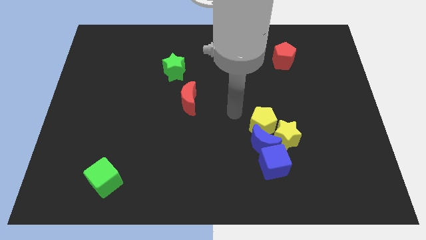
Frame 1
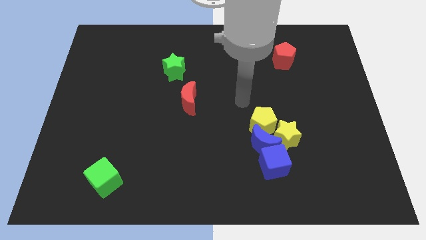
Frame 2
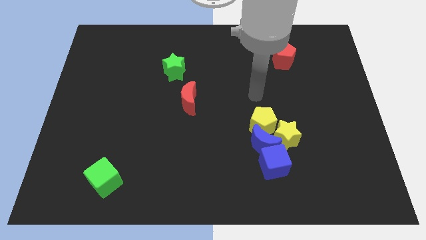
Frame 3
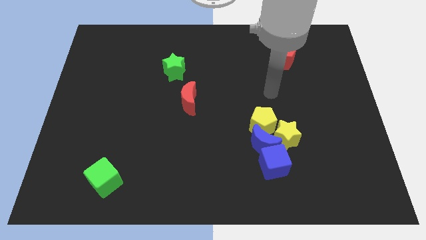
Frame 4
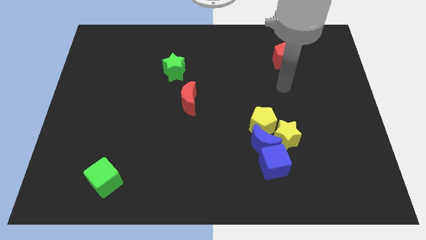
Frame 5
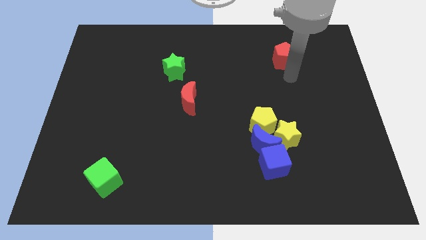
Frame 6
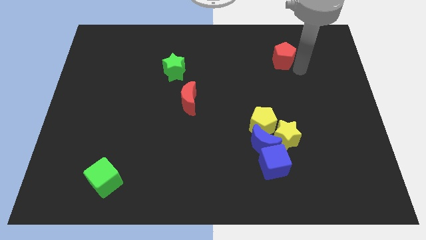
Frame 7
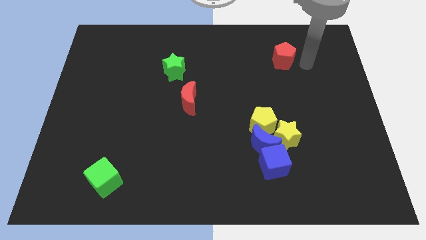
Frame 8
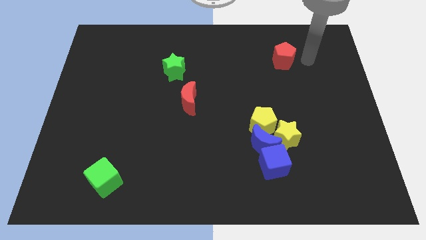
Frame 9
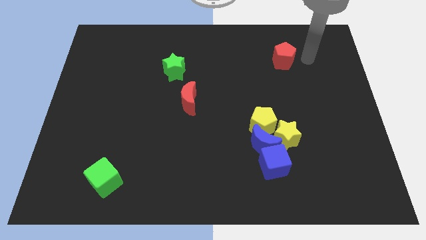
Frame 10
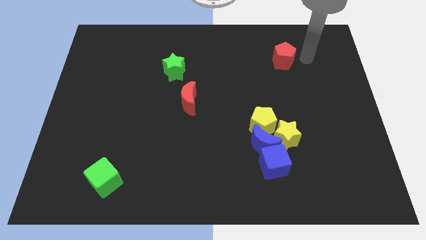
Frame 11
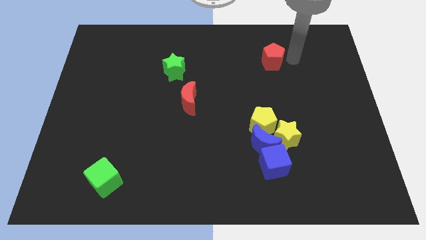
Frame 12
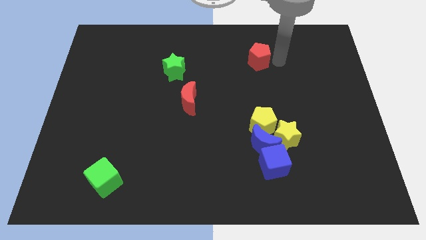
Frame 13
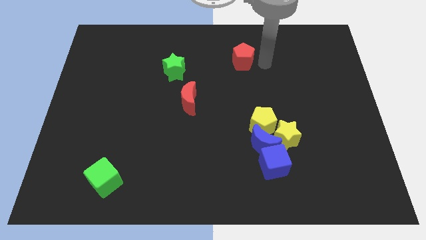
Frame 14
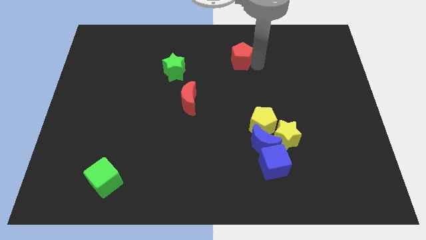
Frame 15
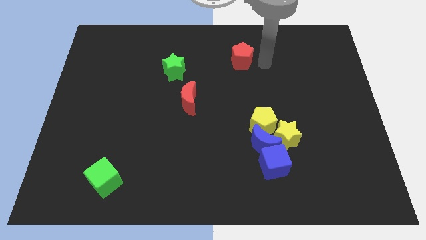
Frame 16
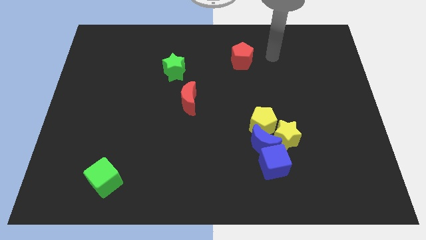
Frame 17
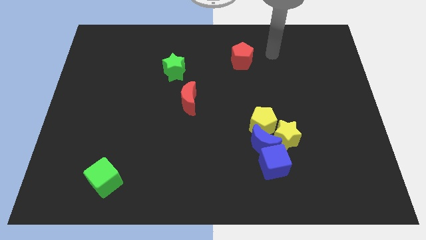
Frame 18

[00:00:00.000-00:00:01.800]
move the red pentagon slightly to the left

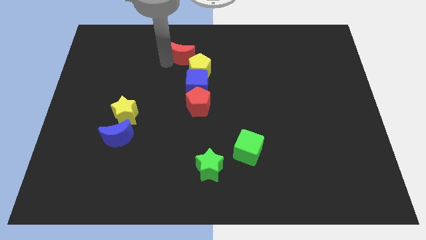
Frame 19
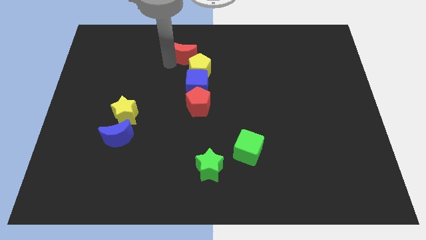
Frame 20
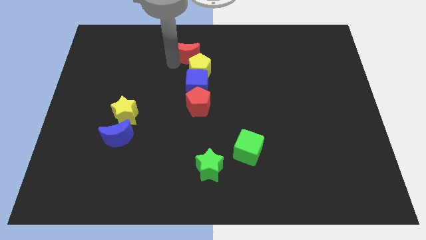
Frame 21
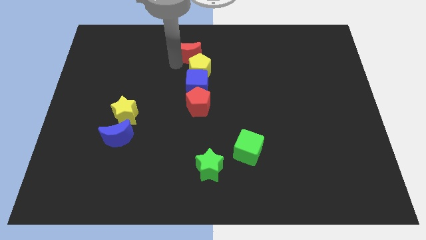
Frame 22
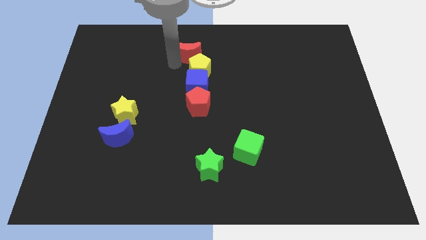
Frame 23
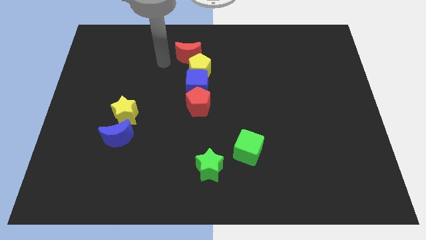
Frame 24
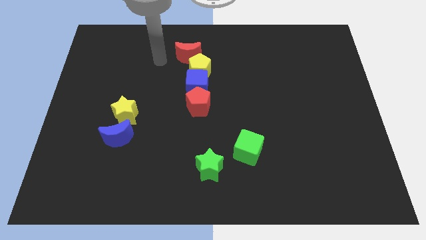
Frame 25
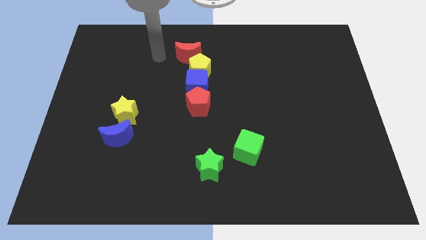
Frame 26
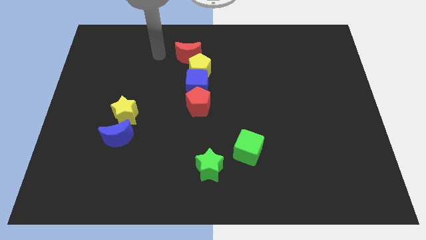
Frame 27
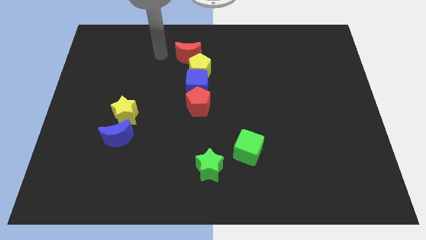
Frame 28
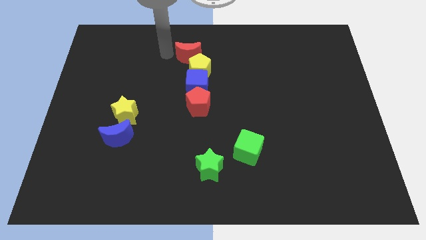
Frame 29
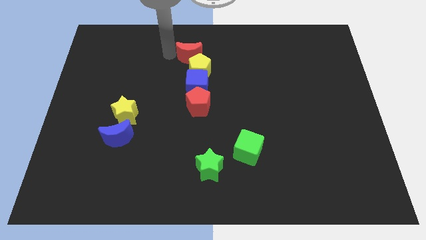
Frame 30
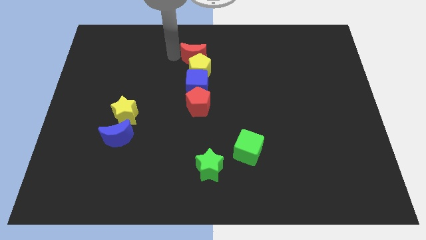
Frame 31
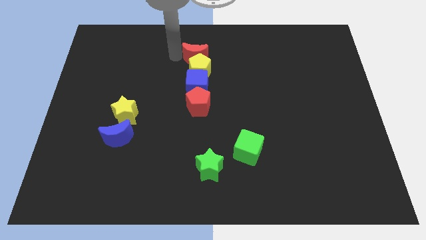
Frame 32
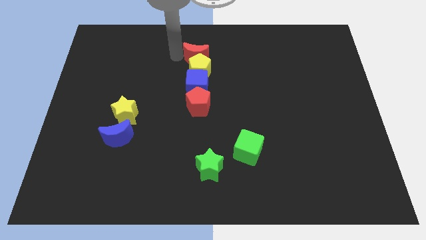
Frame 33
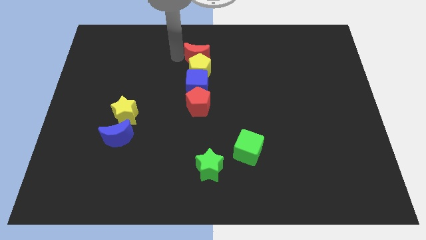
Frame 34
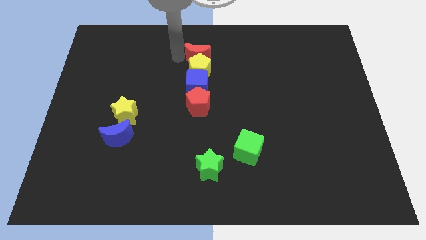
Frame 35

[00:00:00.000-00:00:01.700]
place red crescent on top of yellow pentagon

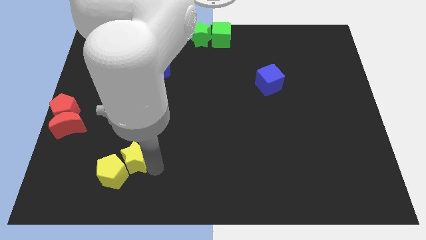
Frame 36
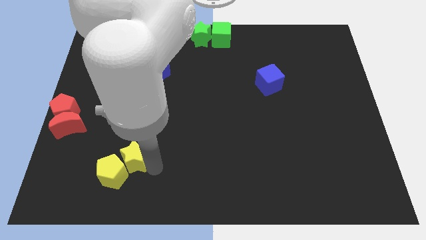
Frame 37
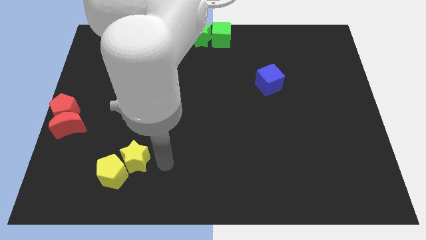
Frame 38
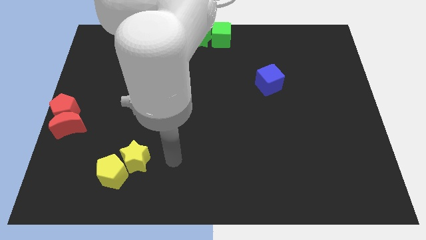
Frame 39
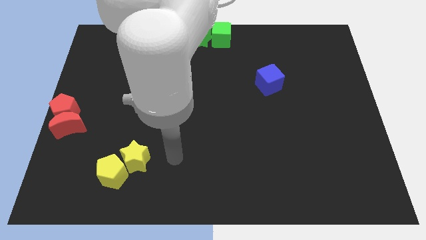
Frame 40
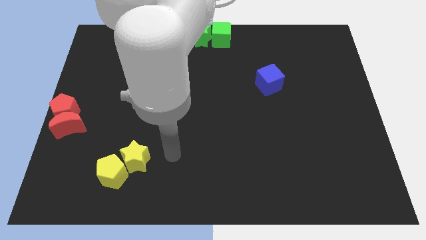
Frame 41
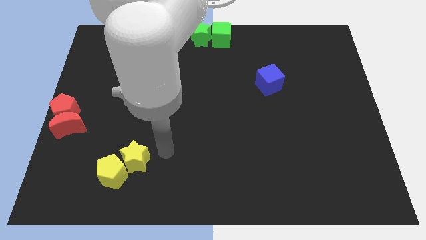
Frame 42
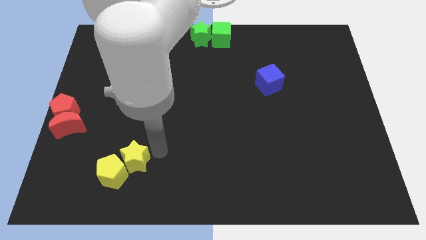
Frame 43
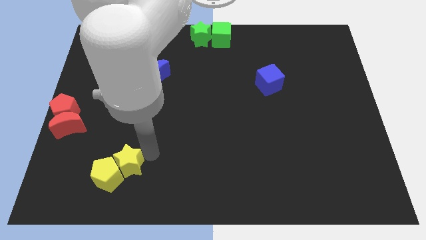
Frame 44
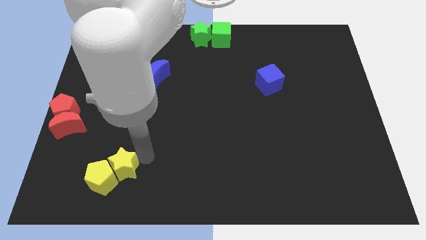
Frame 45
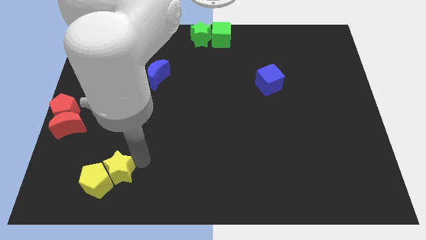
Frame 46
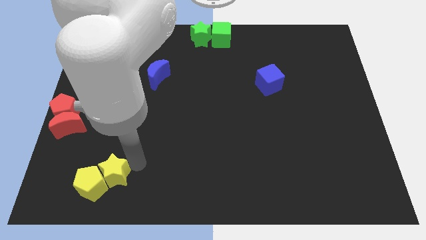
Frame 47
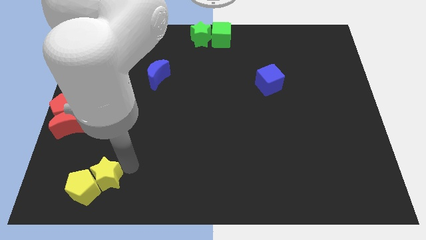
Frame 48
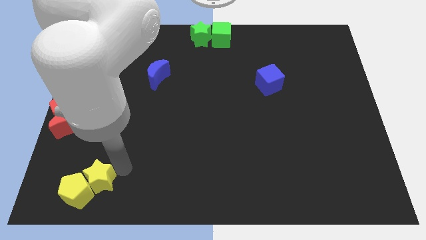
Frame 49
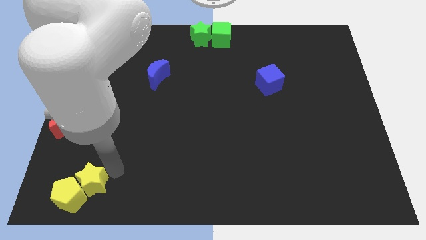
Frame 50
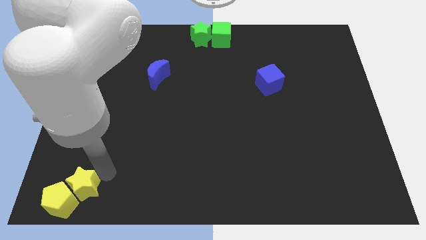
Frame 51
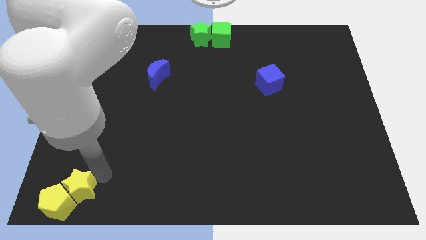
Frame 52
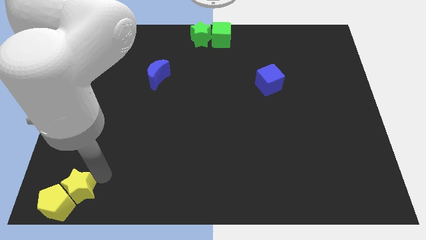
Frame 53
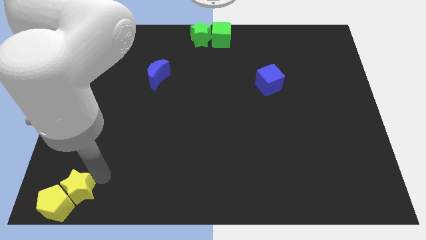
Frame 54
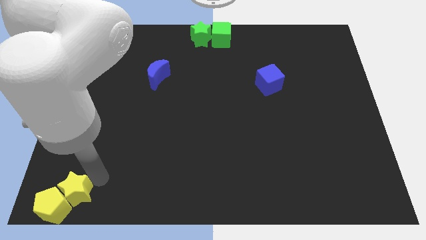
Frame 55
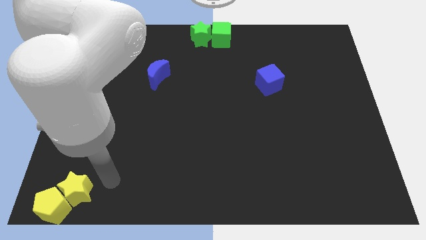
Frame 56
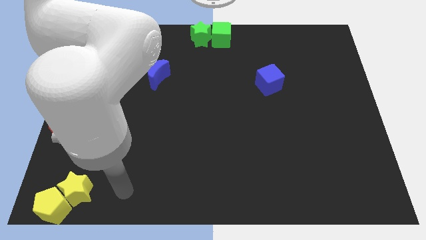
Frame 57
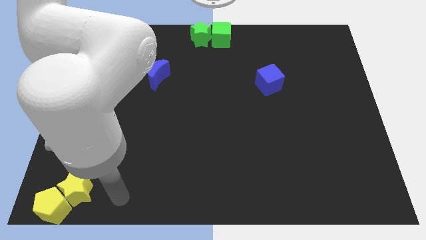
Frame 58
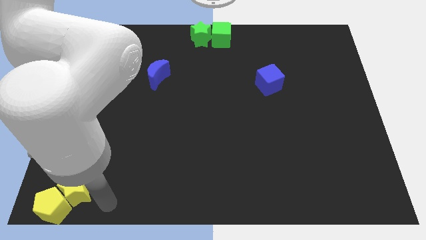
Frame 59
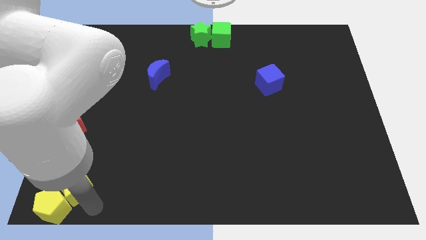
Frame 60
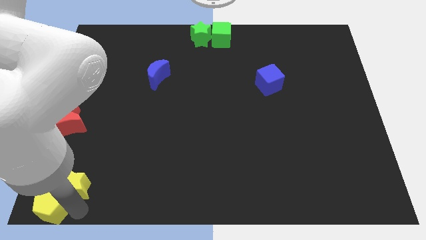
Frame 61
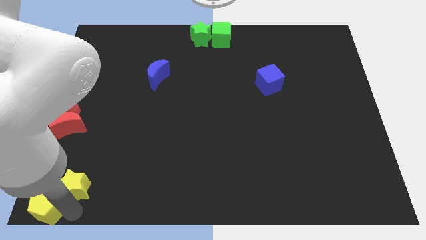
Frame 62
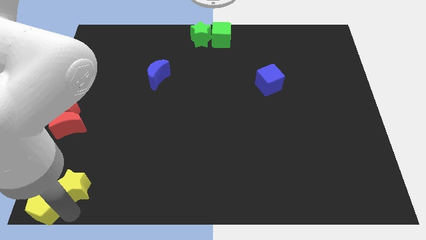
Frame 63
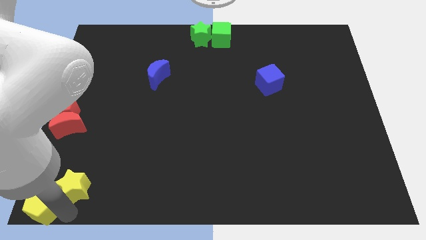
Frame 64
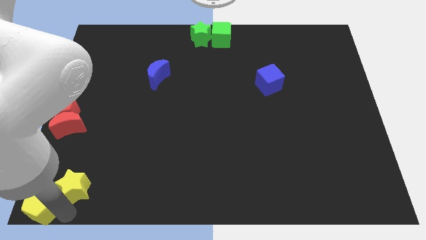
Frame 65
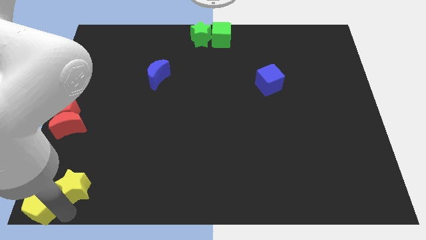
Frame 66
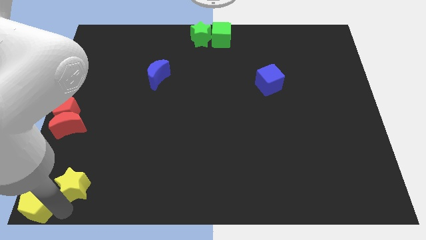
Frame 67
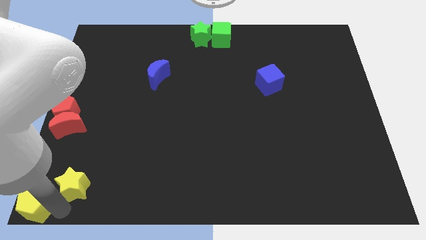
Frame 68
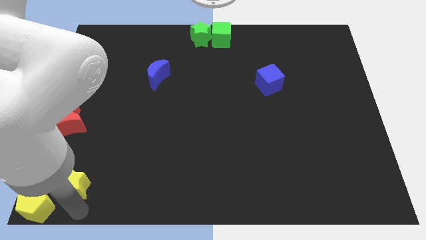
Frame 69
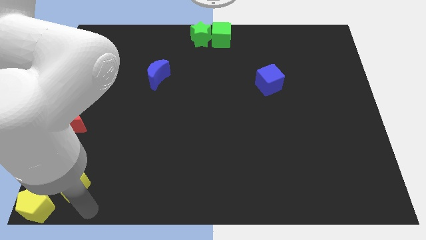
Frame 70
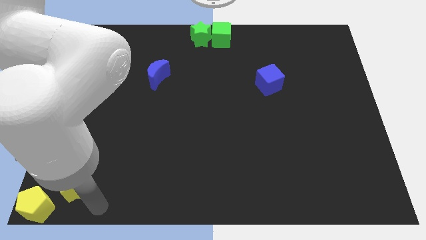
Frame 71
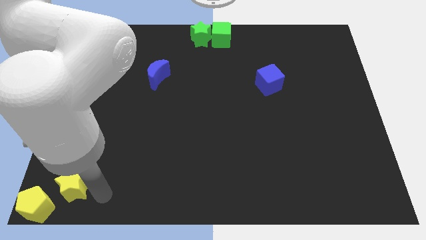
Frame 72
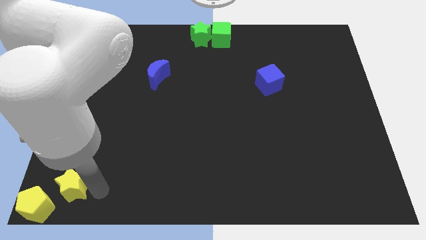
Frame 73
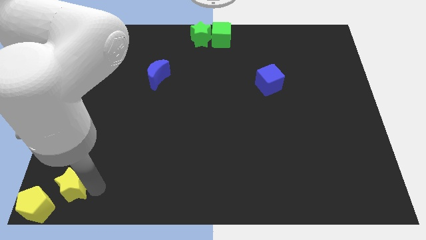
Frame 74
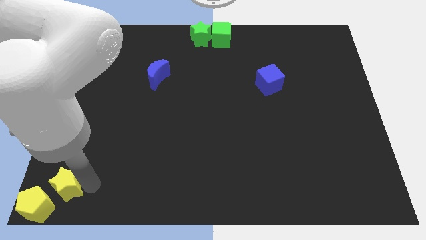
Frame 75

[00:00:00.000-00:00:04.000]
place the yellow pentagon at the bottom left

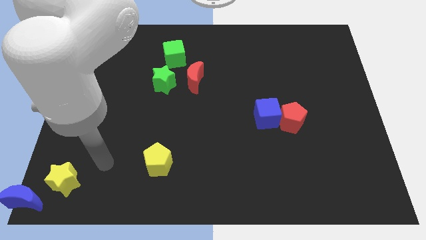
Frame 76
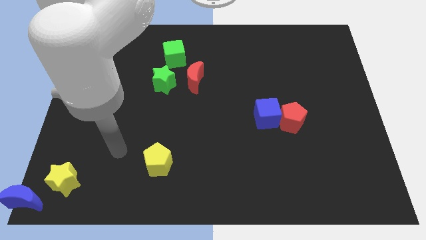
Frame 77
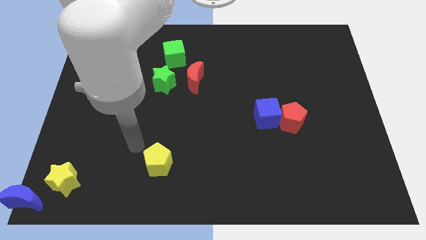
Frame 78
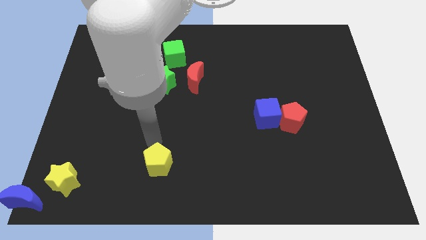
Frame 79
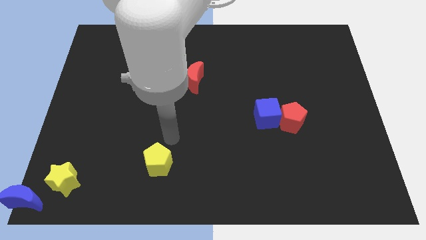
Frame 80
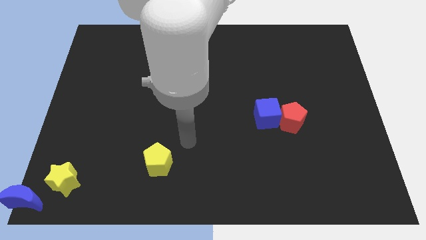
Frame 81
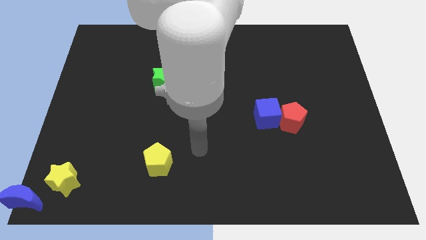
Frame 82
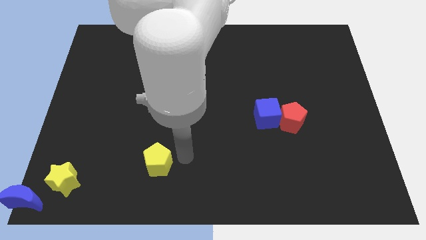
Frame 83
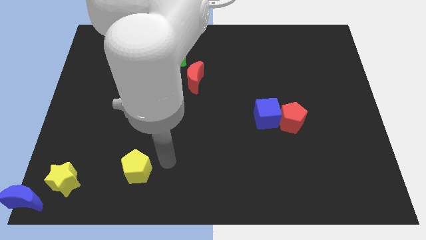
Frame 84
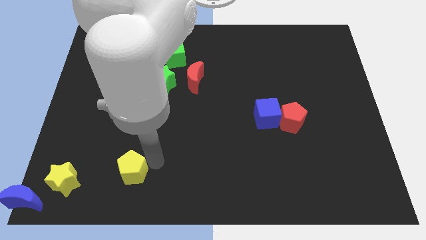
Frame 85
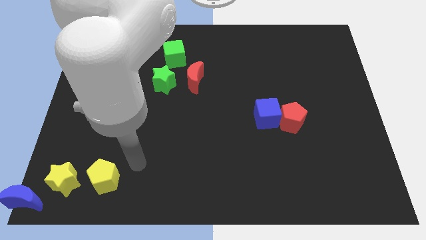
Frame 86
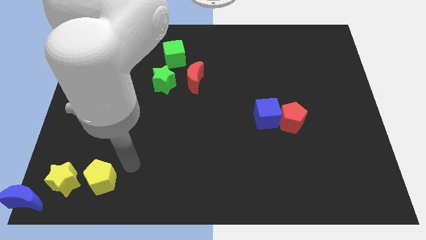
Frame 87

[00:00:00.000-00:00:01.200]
move yellow pentagon right beside the yellow star

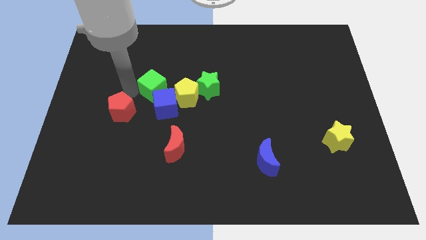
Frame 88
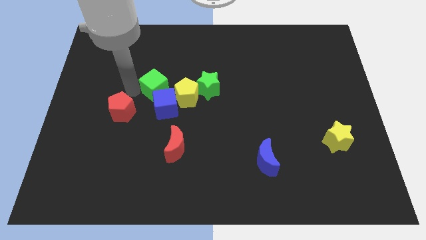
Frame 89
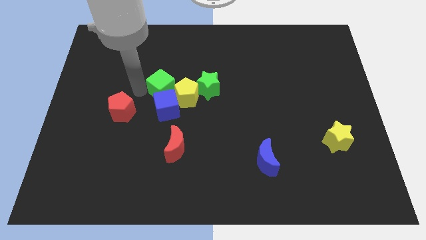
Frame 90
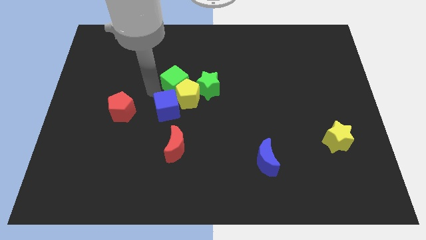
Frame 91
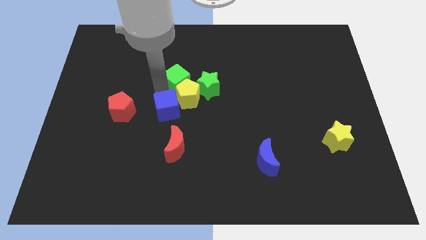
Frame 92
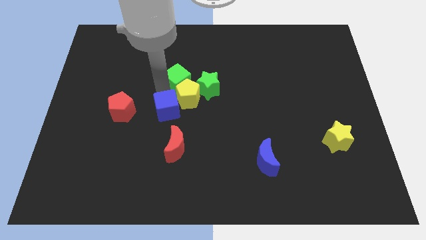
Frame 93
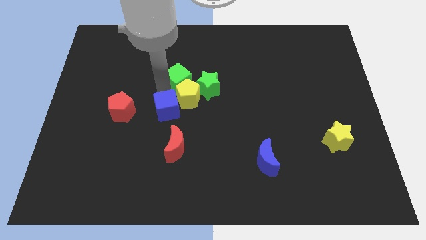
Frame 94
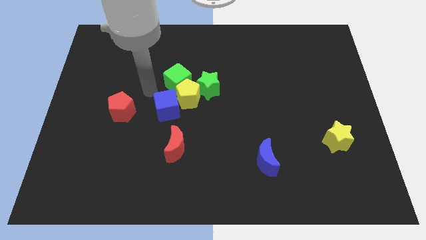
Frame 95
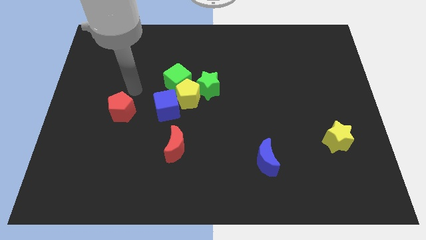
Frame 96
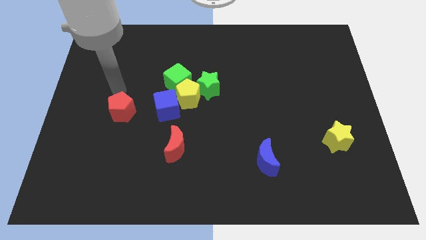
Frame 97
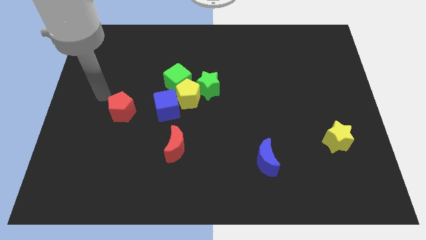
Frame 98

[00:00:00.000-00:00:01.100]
move green cube above the yellow pentagon
